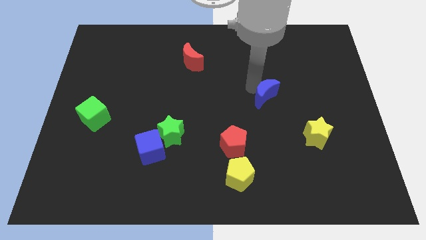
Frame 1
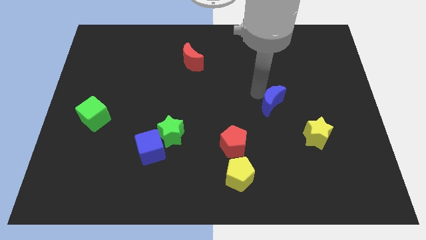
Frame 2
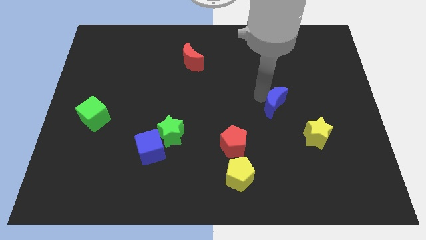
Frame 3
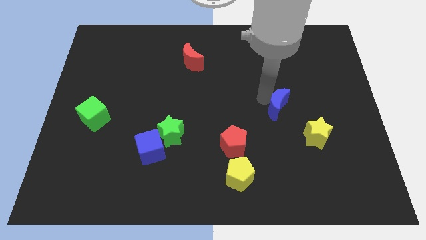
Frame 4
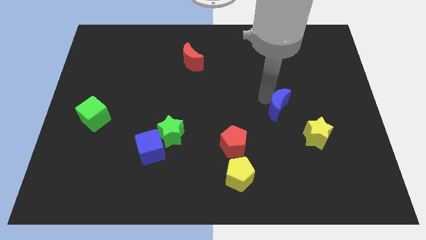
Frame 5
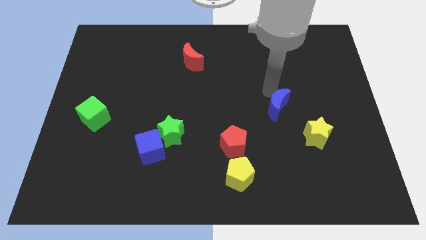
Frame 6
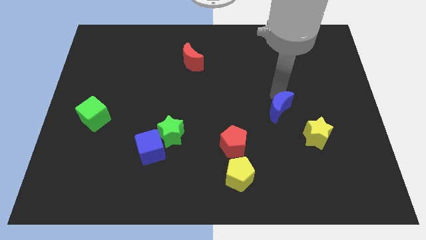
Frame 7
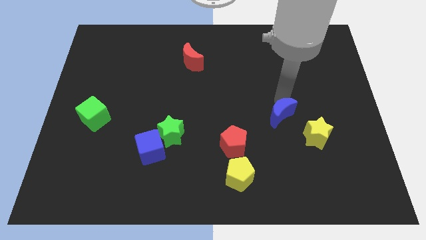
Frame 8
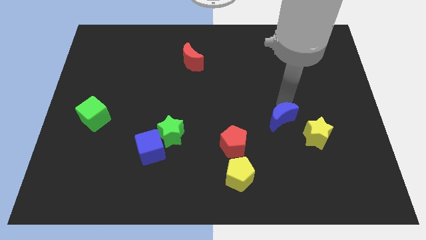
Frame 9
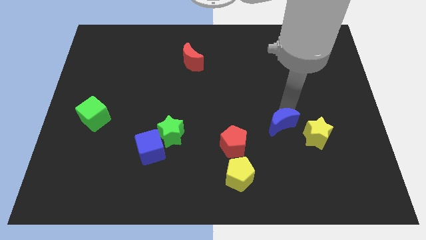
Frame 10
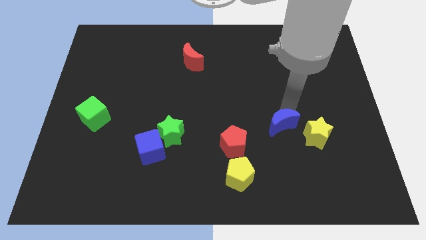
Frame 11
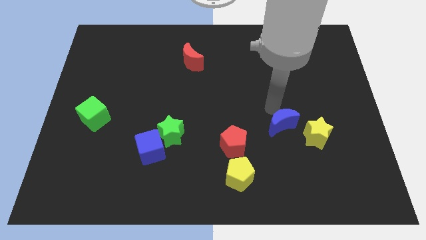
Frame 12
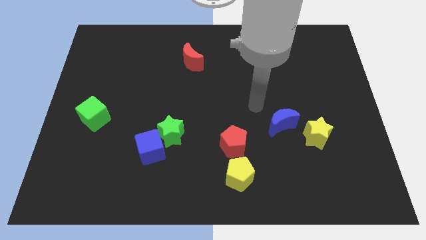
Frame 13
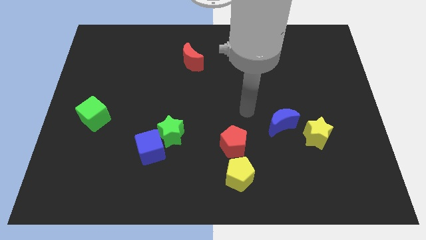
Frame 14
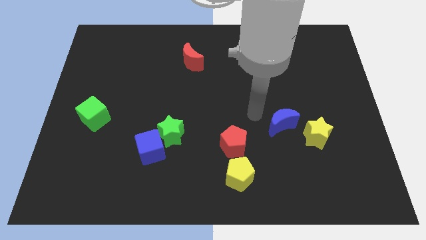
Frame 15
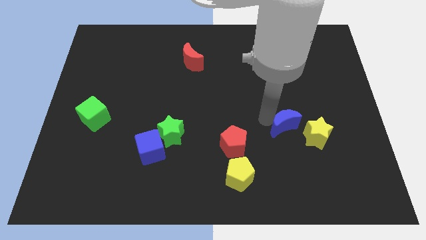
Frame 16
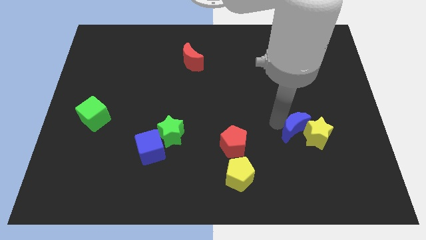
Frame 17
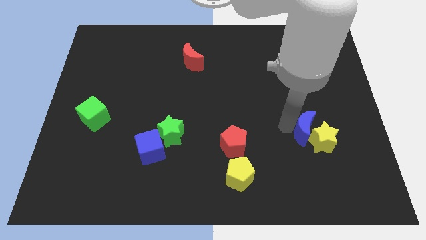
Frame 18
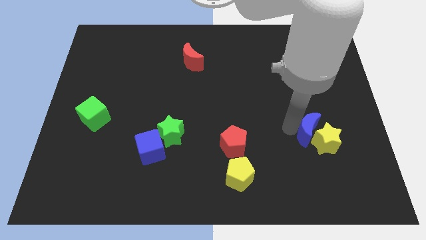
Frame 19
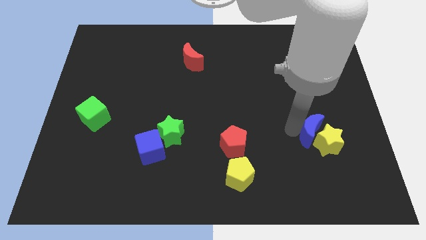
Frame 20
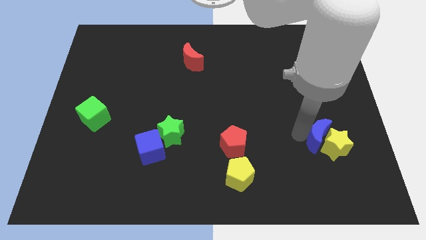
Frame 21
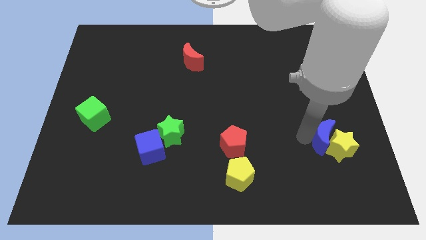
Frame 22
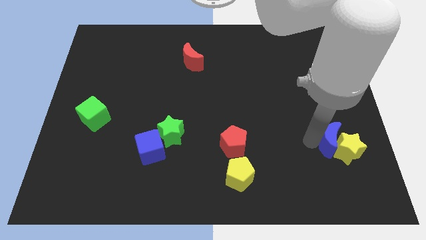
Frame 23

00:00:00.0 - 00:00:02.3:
push the blue crescent into the yellow star

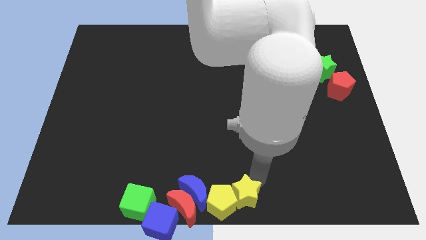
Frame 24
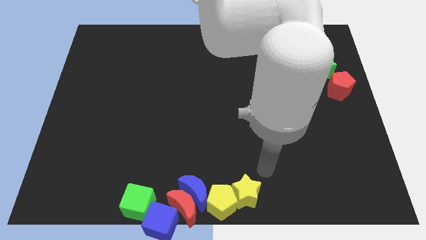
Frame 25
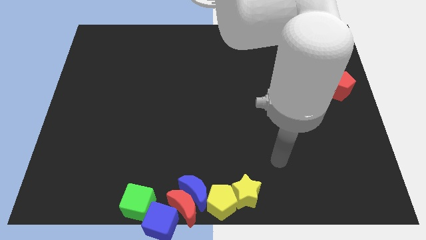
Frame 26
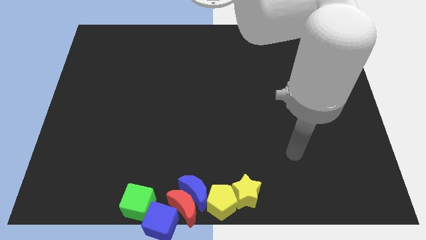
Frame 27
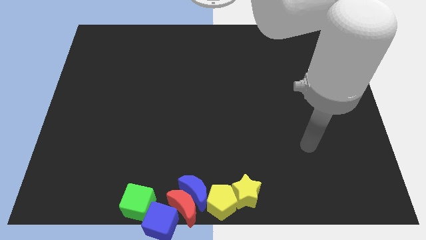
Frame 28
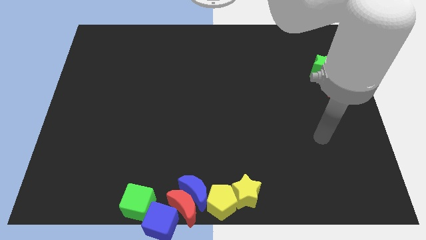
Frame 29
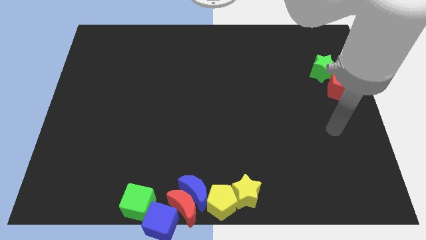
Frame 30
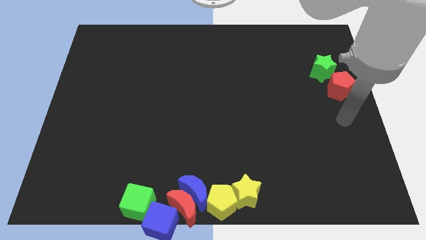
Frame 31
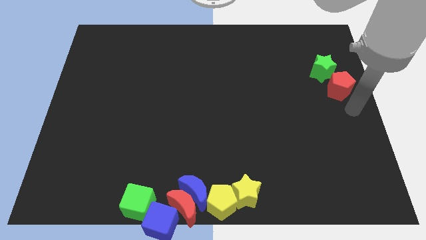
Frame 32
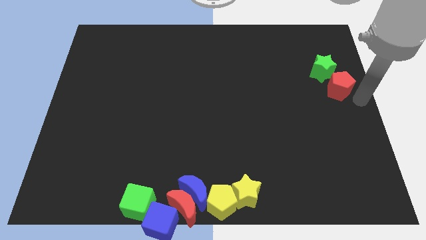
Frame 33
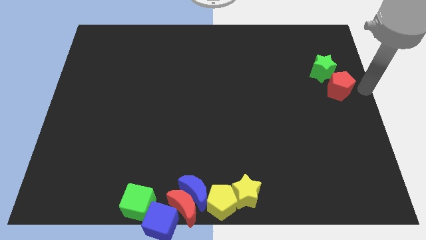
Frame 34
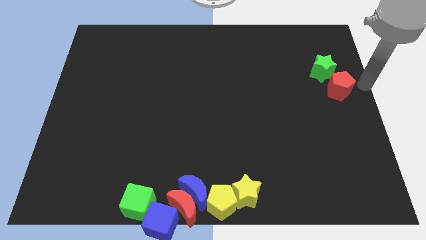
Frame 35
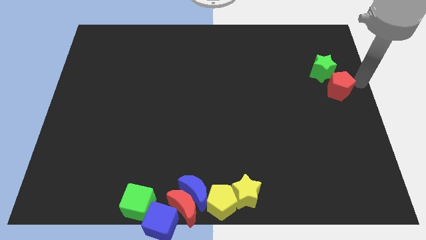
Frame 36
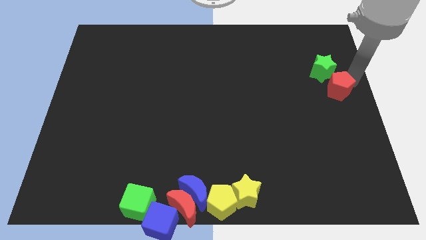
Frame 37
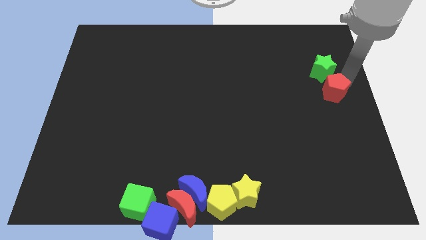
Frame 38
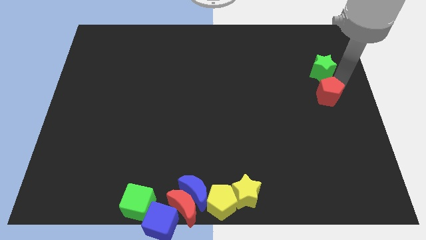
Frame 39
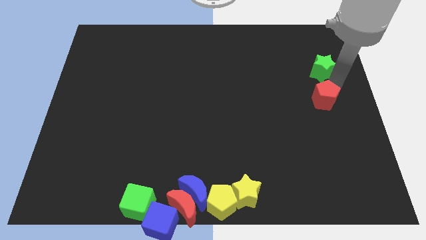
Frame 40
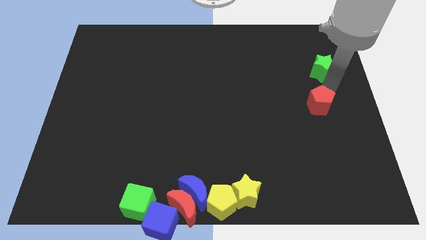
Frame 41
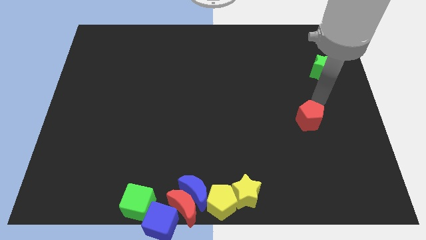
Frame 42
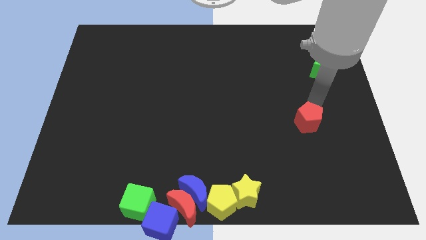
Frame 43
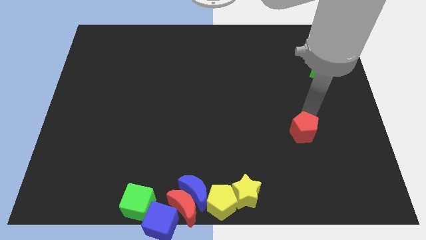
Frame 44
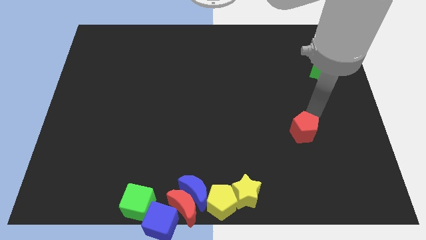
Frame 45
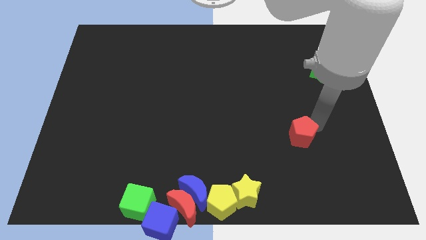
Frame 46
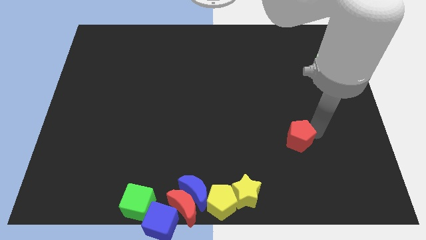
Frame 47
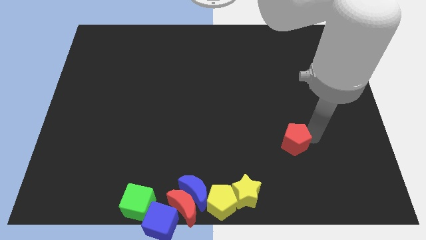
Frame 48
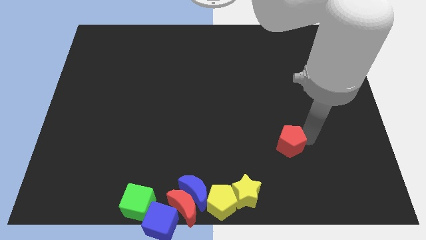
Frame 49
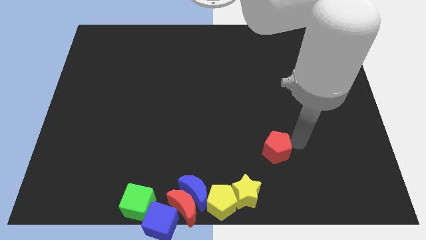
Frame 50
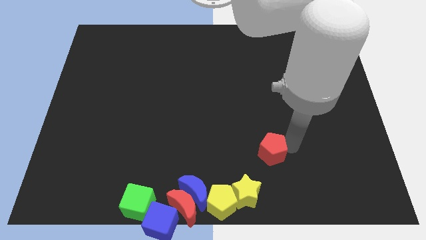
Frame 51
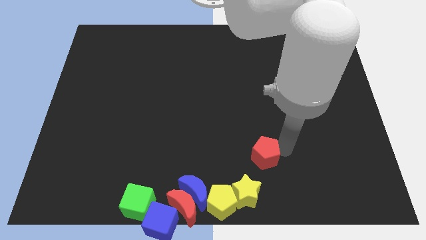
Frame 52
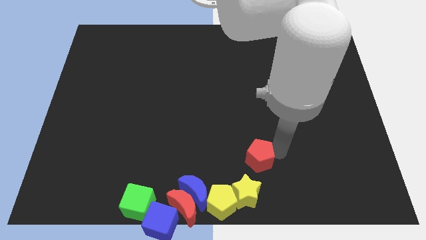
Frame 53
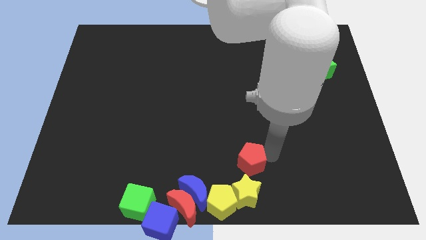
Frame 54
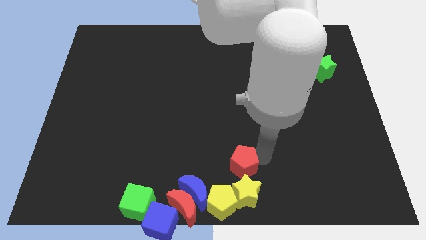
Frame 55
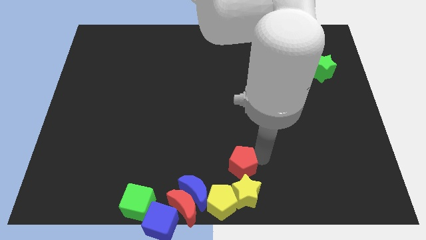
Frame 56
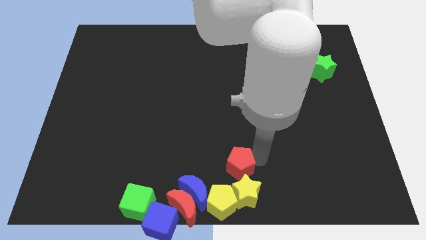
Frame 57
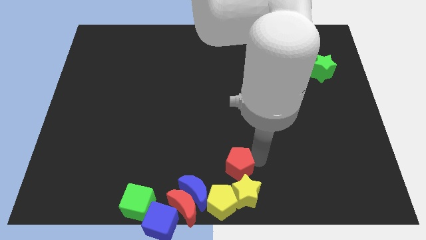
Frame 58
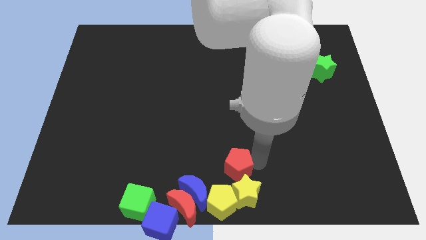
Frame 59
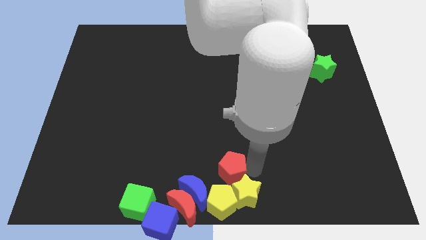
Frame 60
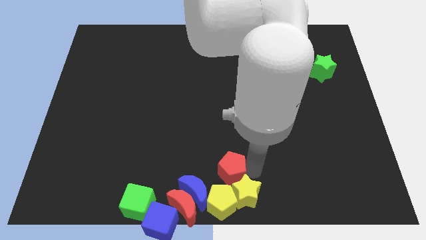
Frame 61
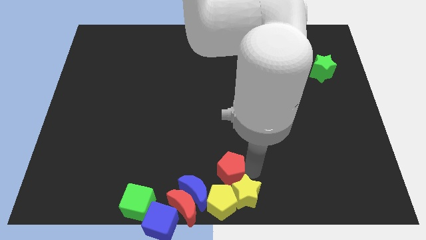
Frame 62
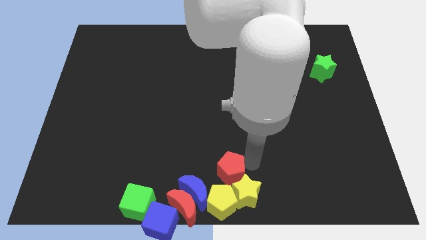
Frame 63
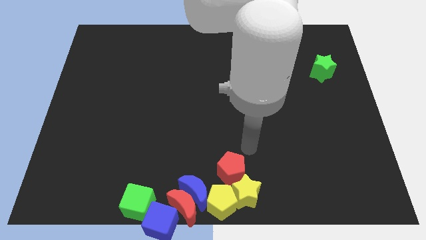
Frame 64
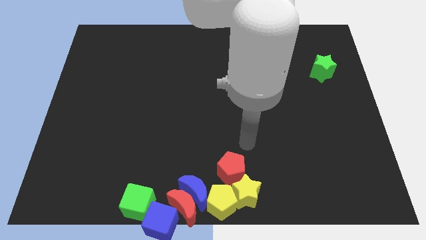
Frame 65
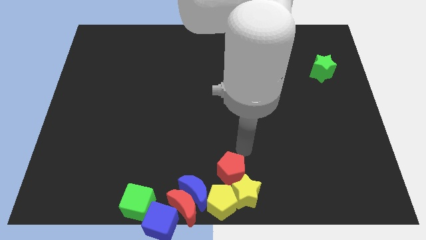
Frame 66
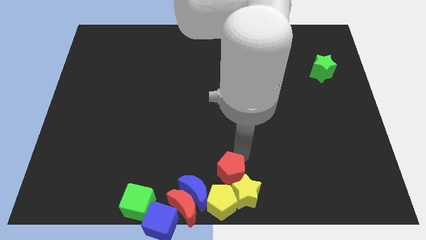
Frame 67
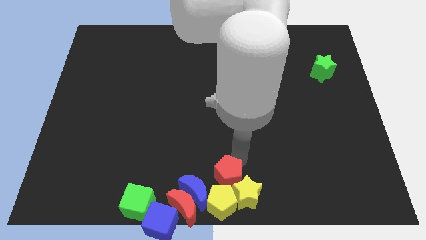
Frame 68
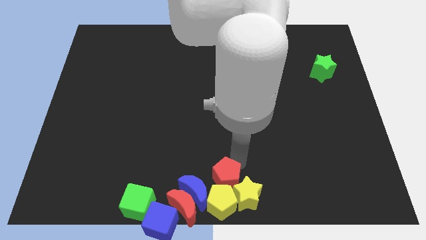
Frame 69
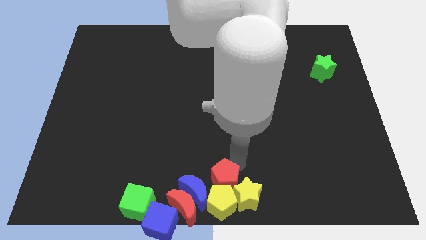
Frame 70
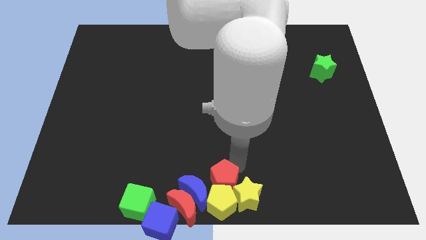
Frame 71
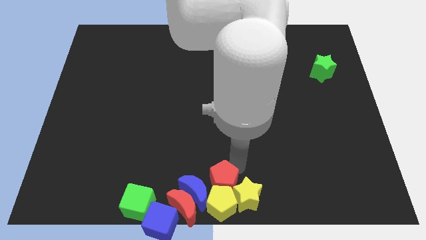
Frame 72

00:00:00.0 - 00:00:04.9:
slide the red pentagon into the top side of the yellow blocks

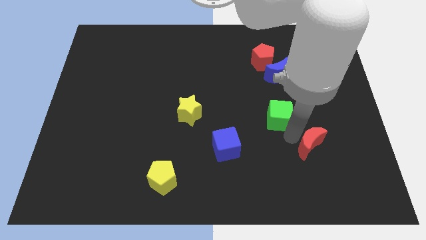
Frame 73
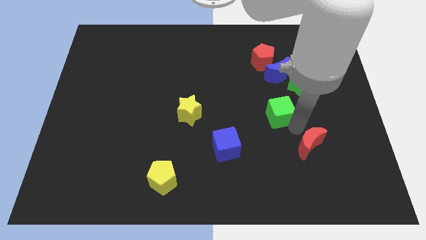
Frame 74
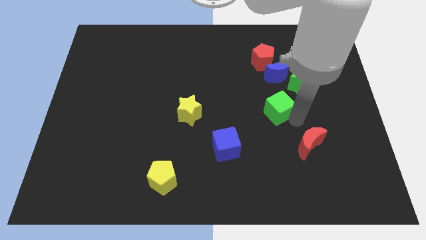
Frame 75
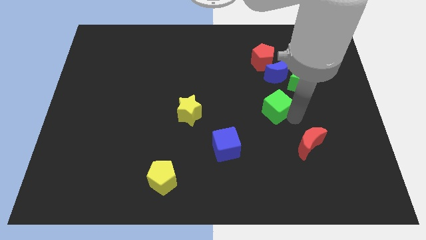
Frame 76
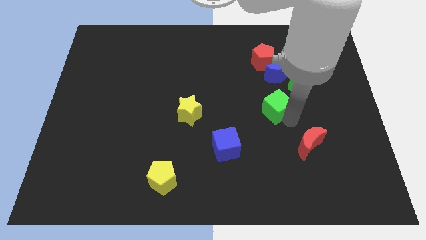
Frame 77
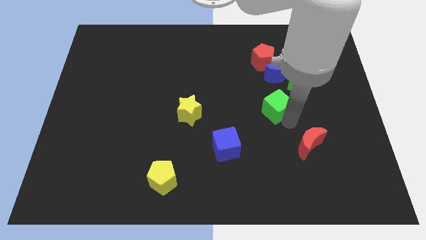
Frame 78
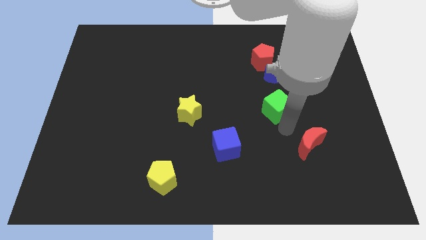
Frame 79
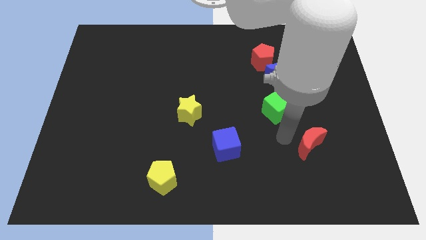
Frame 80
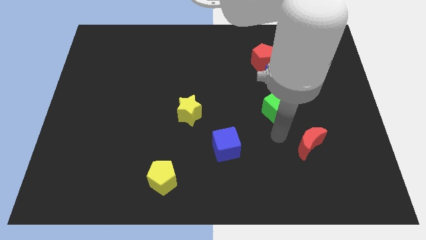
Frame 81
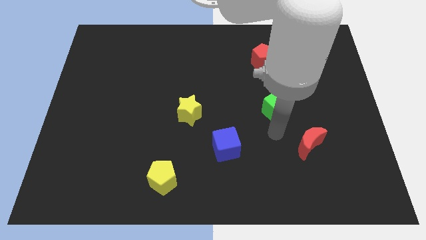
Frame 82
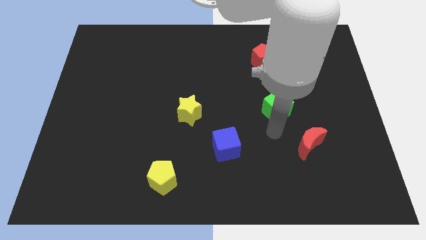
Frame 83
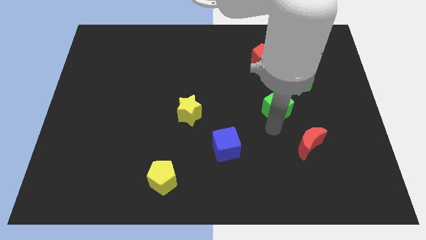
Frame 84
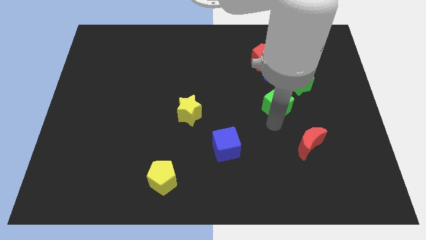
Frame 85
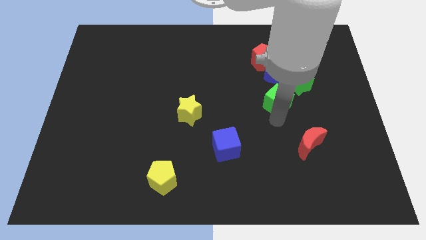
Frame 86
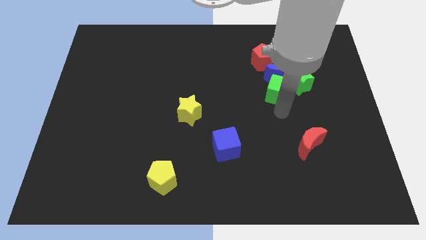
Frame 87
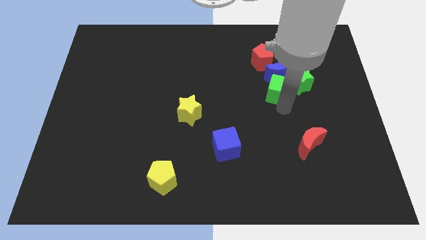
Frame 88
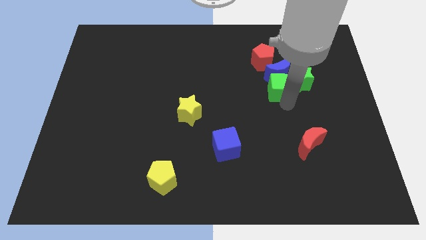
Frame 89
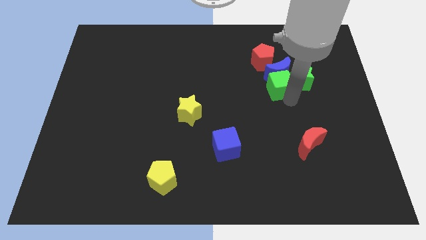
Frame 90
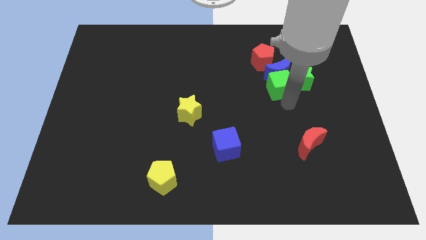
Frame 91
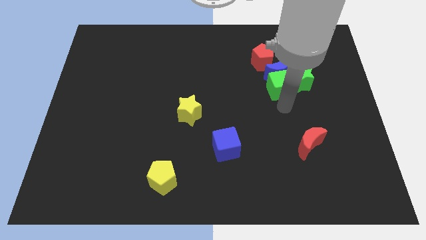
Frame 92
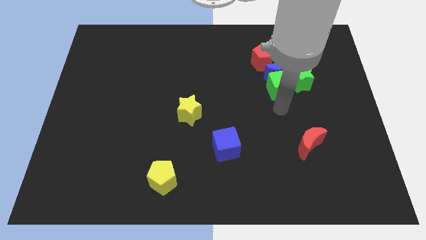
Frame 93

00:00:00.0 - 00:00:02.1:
move green cube into blue moon
